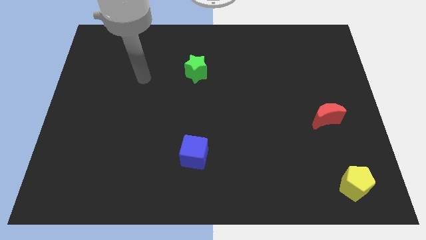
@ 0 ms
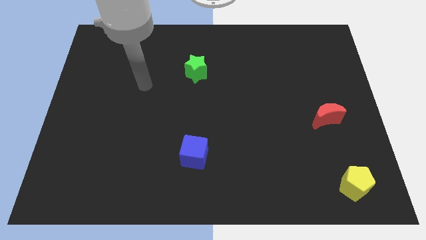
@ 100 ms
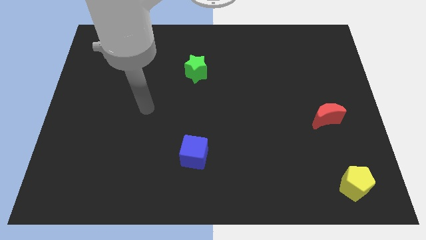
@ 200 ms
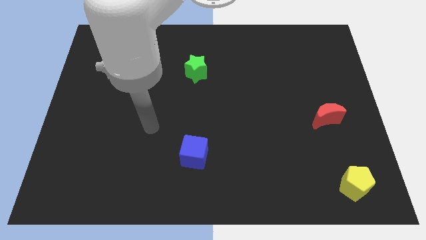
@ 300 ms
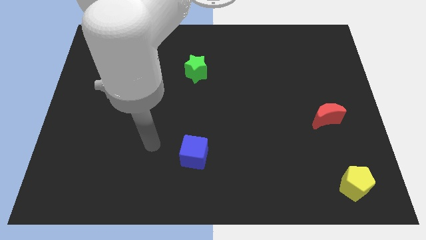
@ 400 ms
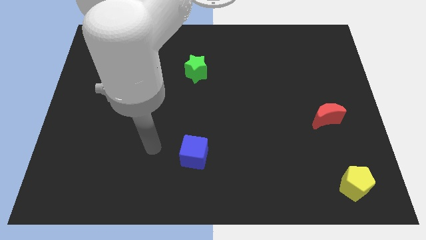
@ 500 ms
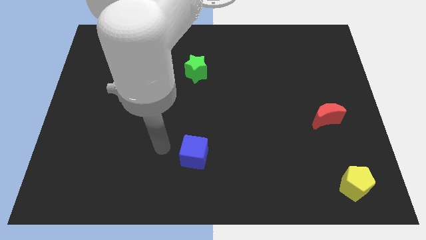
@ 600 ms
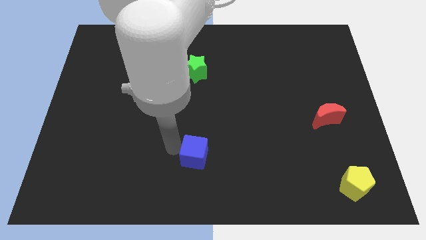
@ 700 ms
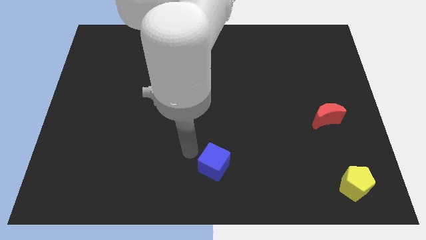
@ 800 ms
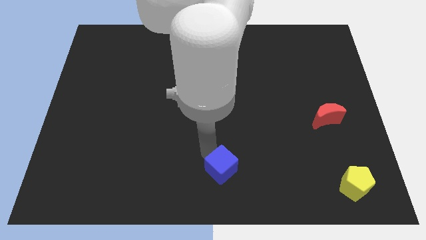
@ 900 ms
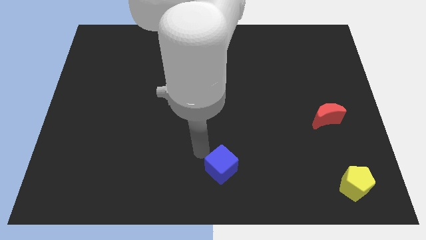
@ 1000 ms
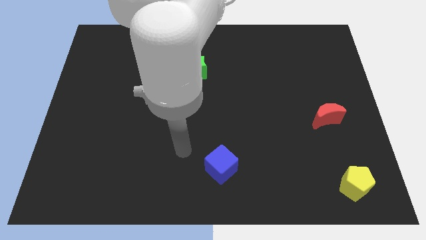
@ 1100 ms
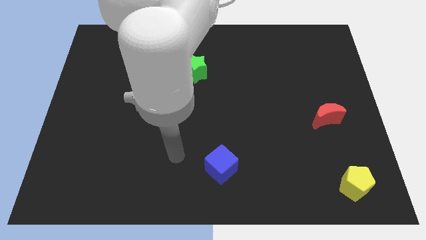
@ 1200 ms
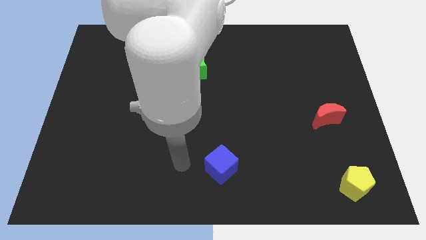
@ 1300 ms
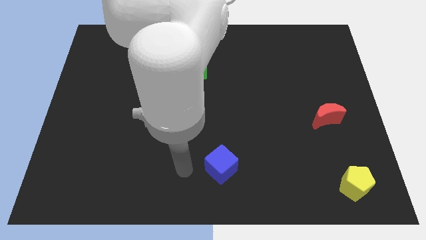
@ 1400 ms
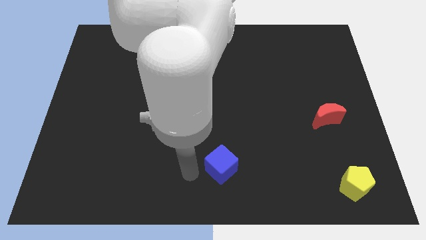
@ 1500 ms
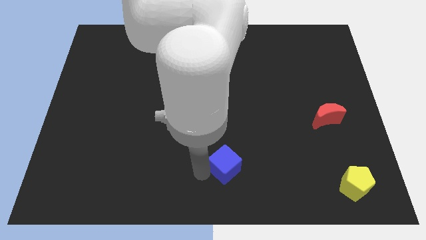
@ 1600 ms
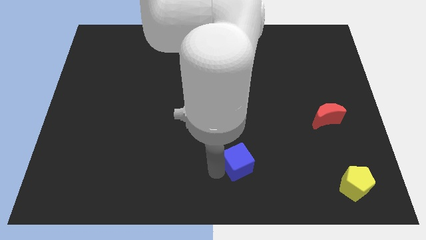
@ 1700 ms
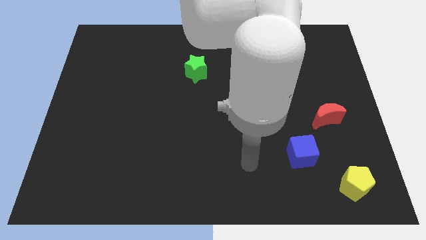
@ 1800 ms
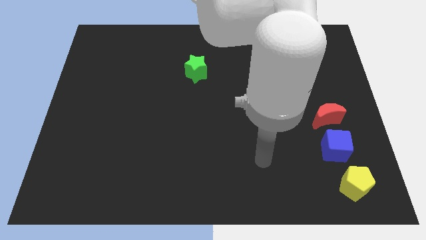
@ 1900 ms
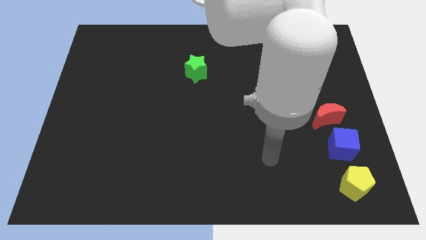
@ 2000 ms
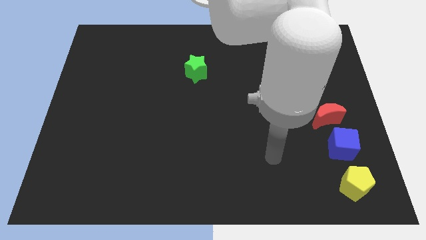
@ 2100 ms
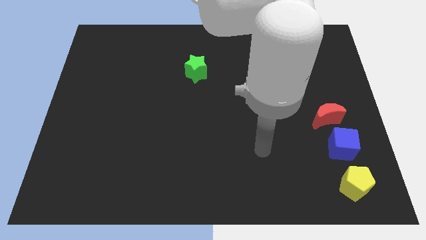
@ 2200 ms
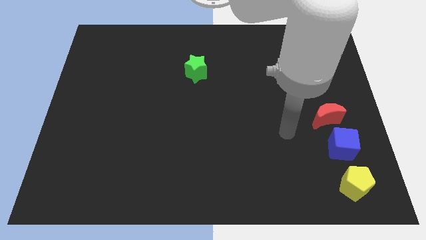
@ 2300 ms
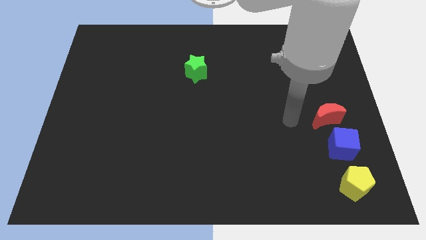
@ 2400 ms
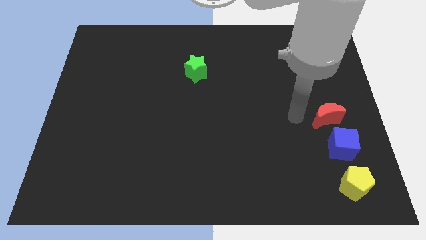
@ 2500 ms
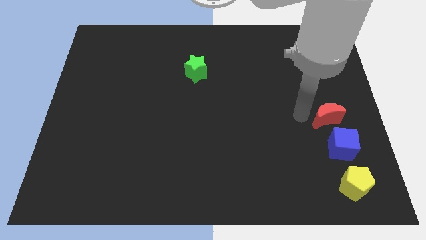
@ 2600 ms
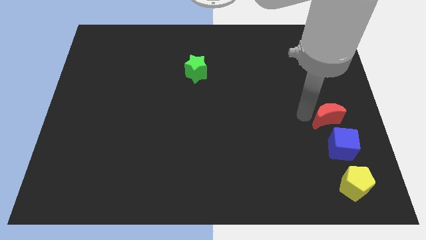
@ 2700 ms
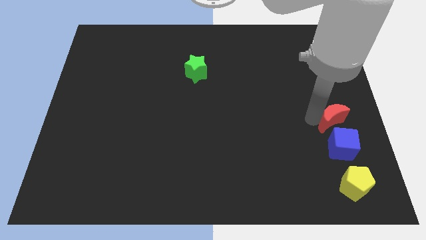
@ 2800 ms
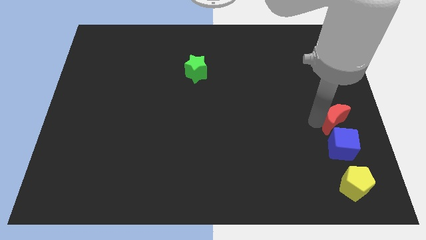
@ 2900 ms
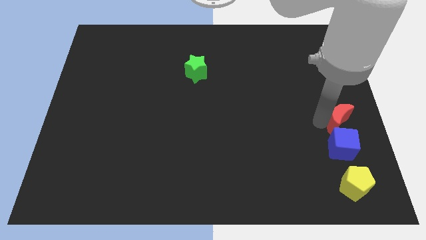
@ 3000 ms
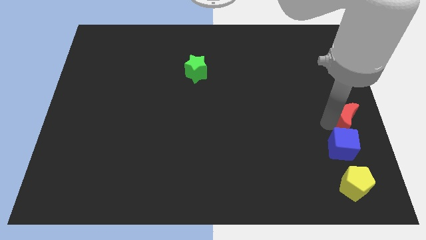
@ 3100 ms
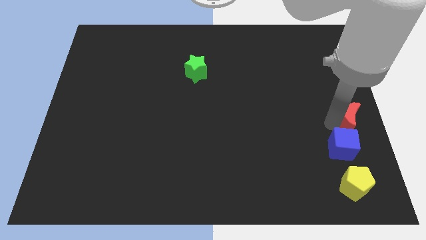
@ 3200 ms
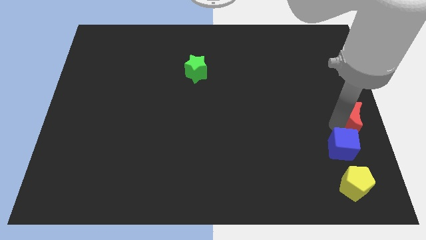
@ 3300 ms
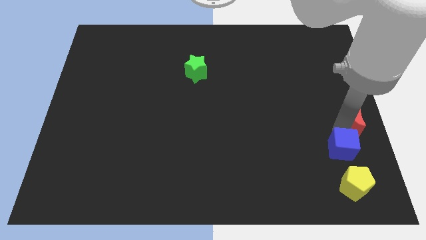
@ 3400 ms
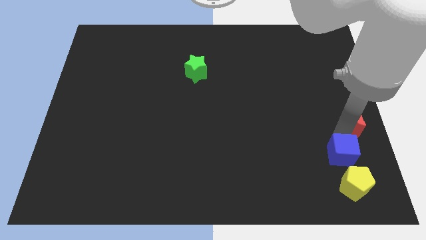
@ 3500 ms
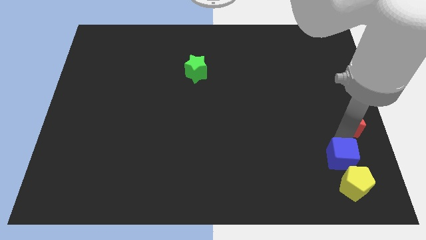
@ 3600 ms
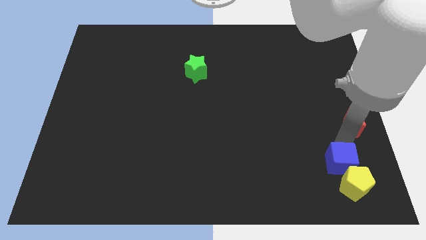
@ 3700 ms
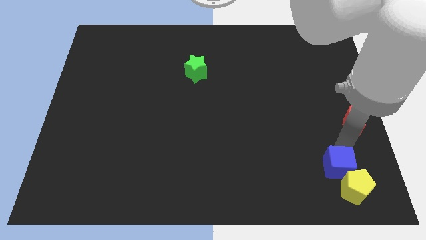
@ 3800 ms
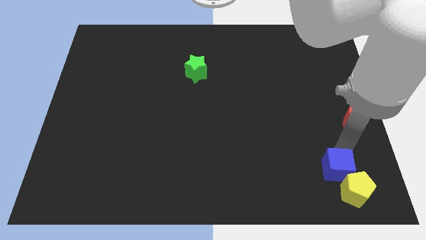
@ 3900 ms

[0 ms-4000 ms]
put the cube close to the yellow block

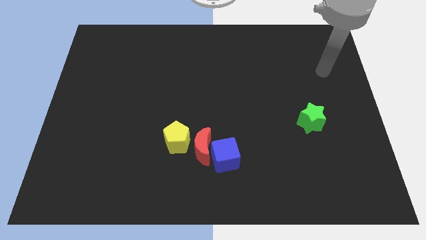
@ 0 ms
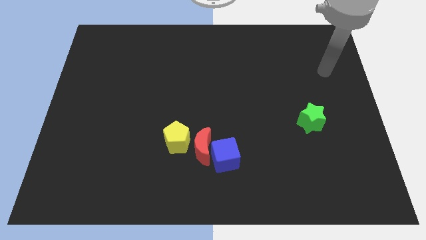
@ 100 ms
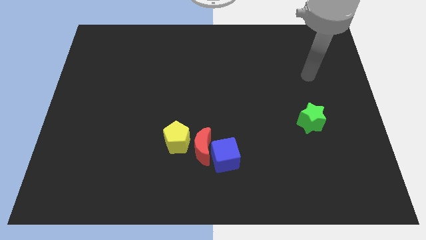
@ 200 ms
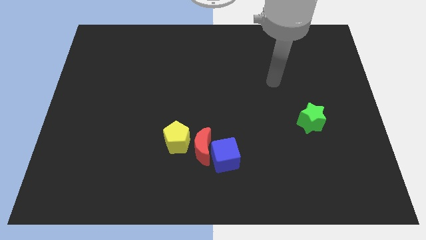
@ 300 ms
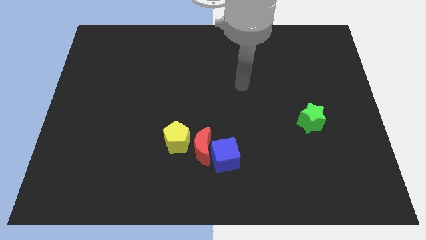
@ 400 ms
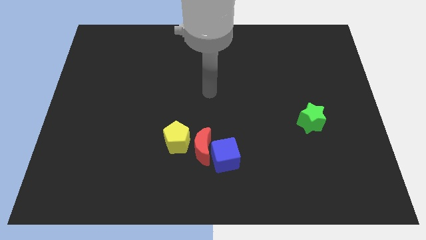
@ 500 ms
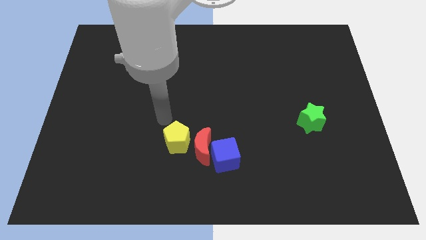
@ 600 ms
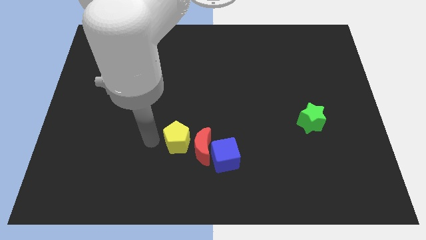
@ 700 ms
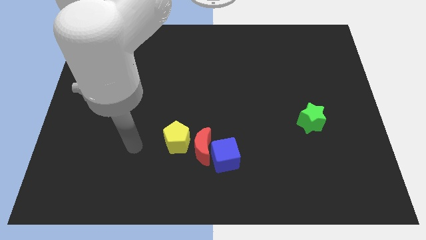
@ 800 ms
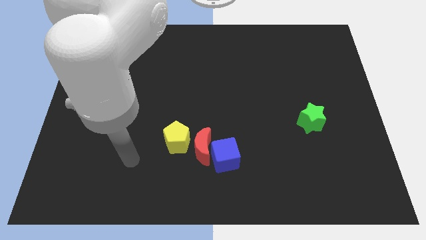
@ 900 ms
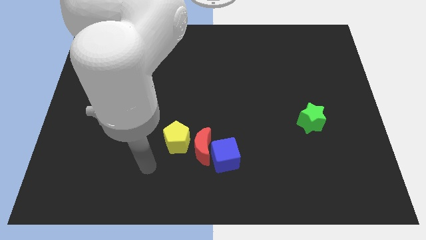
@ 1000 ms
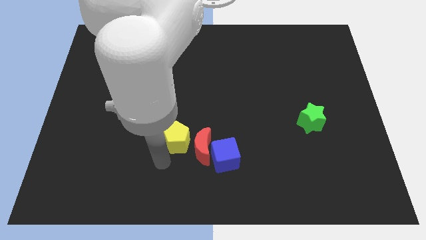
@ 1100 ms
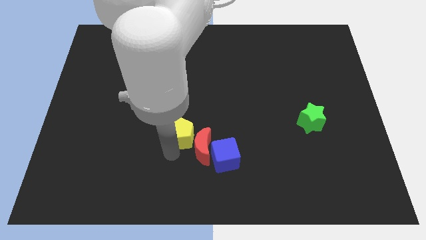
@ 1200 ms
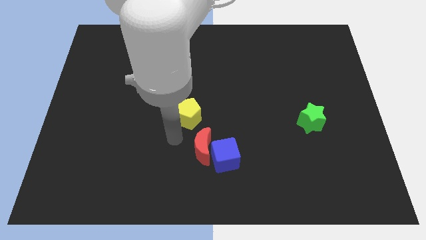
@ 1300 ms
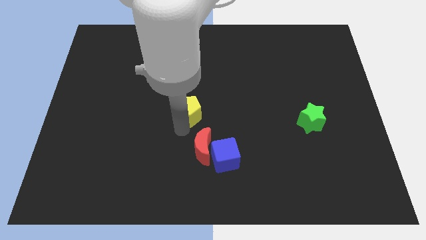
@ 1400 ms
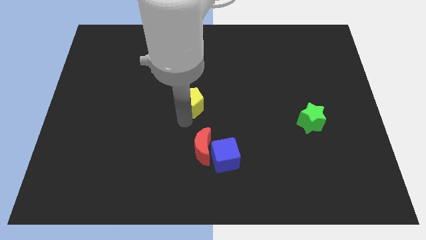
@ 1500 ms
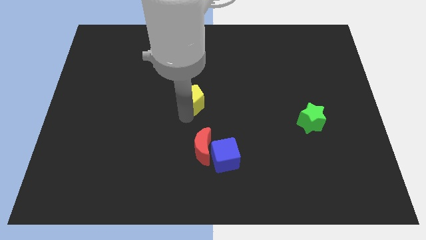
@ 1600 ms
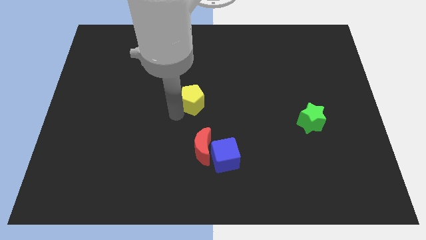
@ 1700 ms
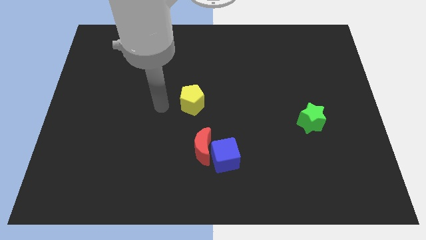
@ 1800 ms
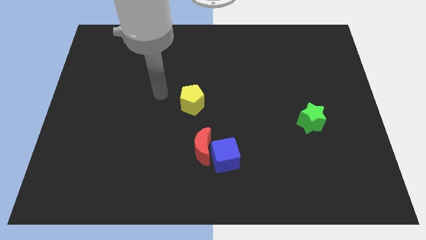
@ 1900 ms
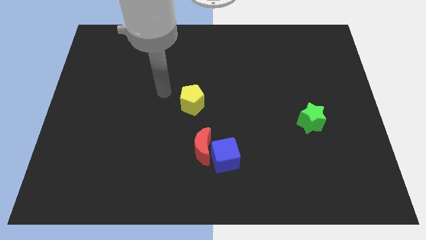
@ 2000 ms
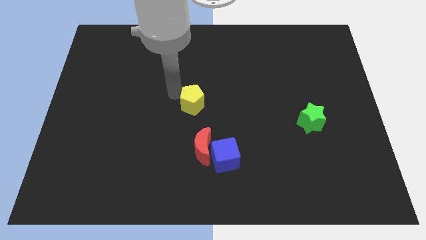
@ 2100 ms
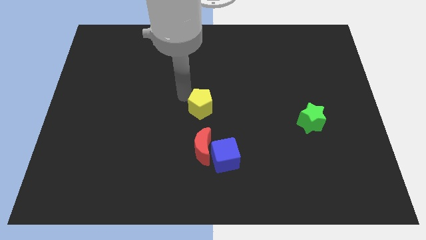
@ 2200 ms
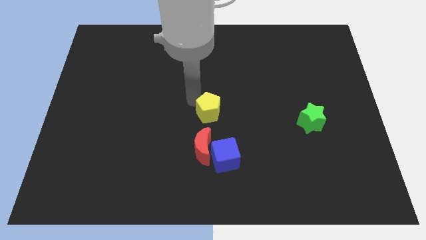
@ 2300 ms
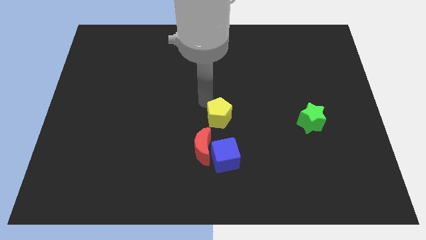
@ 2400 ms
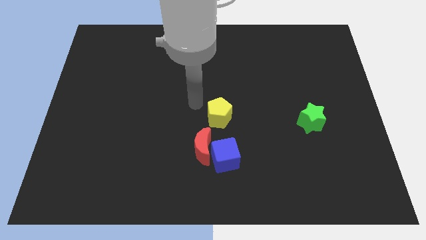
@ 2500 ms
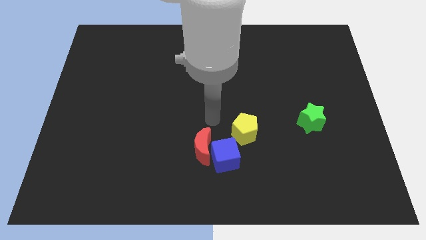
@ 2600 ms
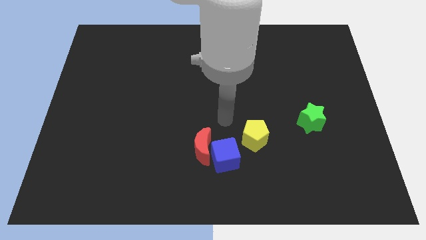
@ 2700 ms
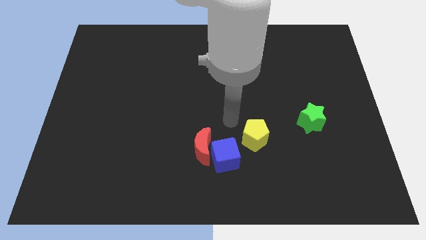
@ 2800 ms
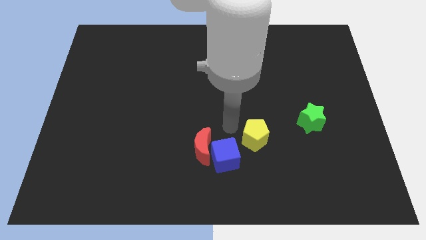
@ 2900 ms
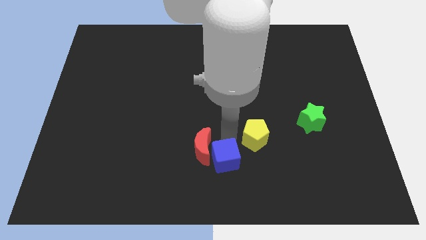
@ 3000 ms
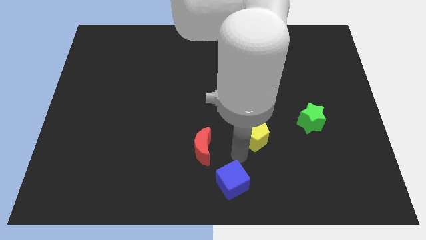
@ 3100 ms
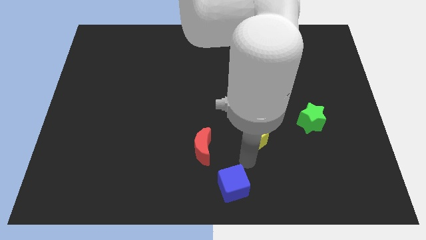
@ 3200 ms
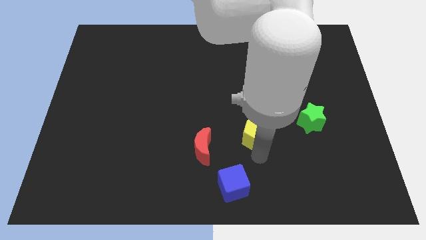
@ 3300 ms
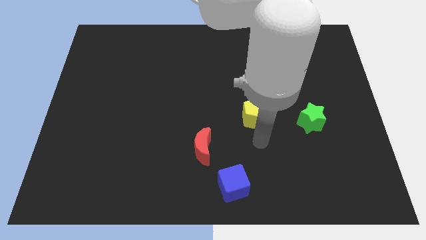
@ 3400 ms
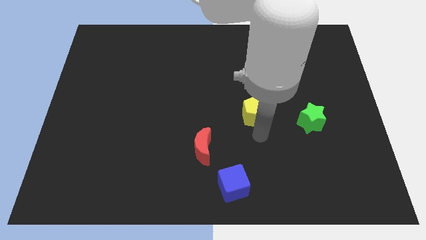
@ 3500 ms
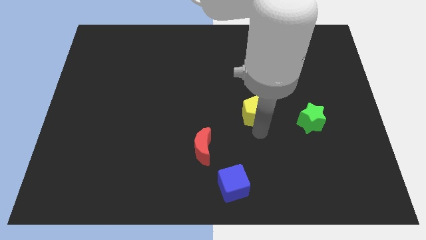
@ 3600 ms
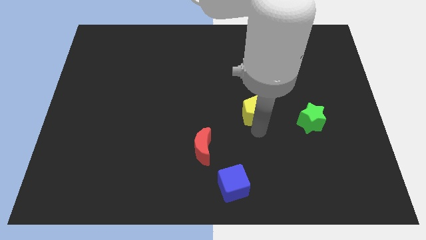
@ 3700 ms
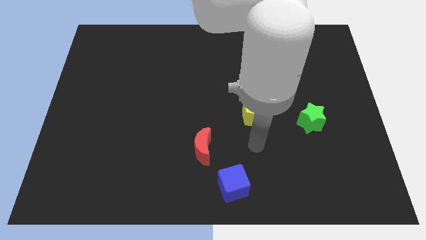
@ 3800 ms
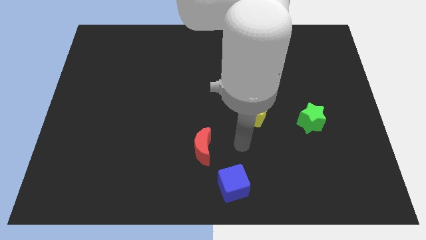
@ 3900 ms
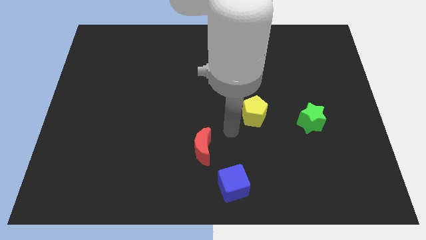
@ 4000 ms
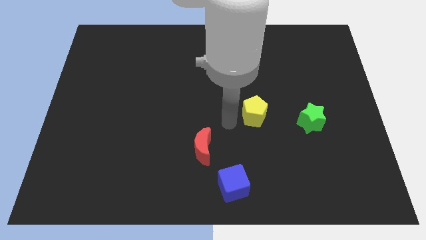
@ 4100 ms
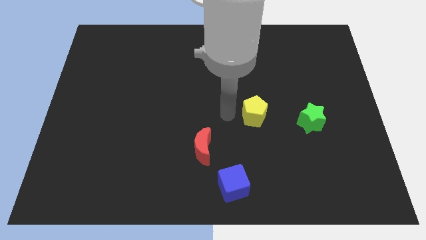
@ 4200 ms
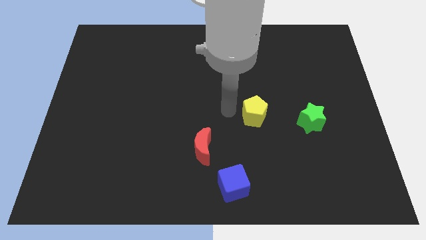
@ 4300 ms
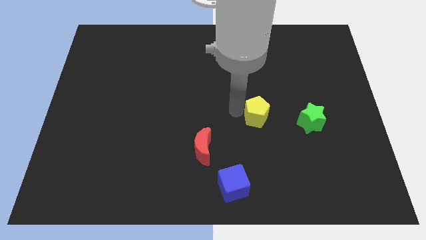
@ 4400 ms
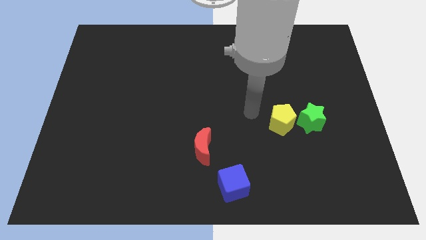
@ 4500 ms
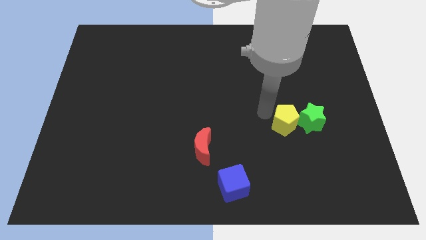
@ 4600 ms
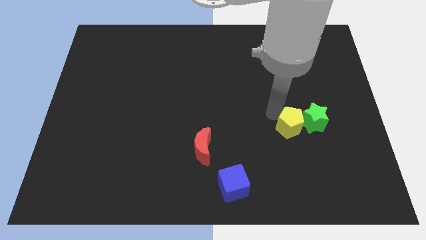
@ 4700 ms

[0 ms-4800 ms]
push the pentagon towards the green block
